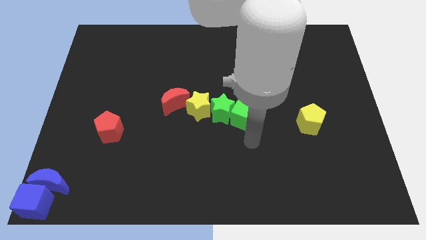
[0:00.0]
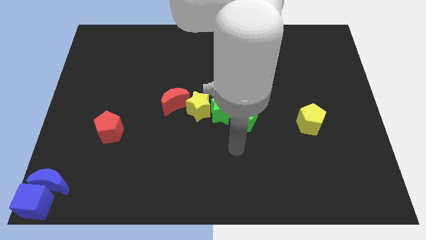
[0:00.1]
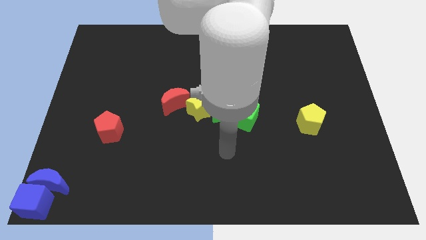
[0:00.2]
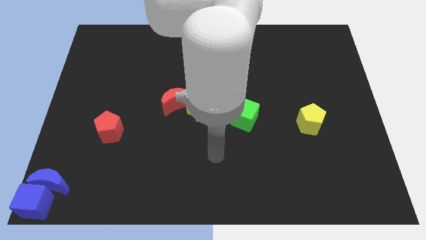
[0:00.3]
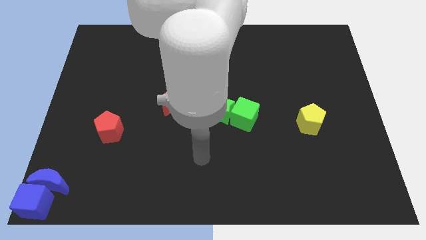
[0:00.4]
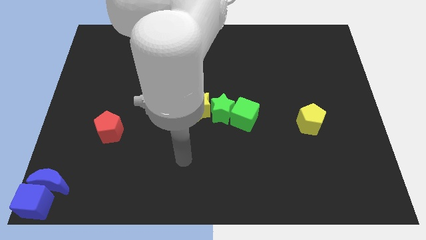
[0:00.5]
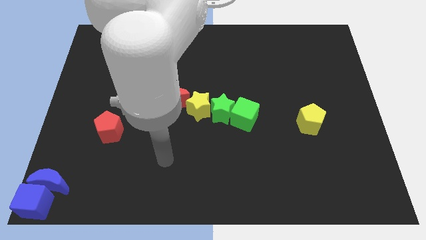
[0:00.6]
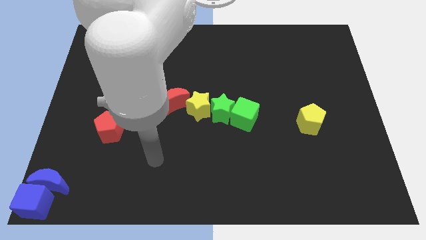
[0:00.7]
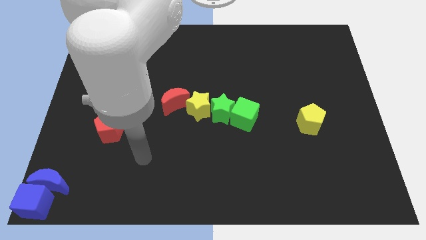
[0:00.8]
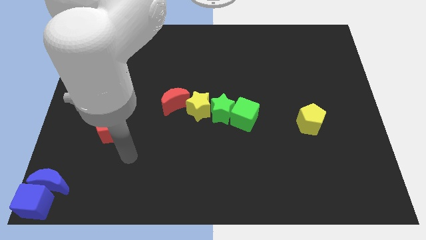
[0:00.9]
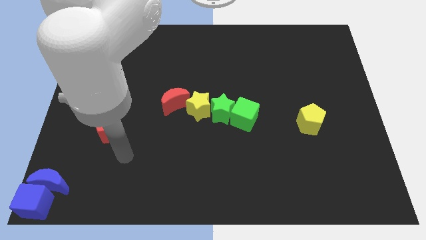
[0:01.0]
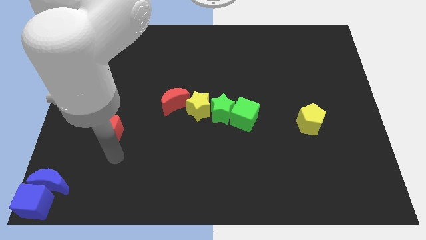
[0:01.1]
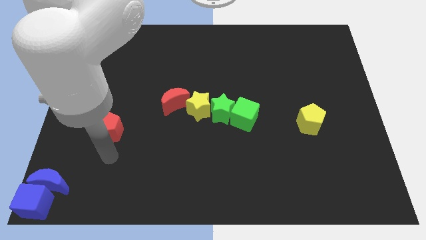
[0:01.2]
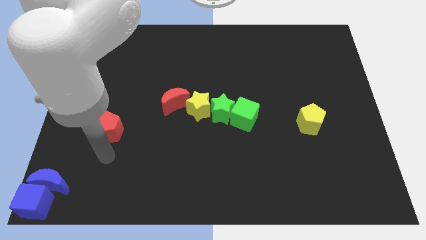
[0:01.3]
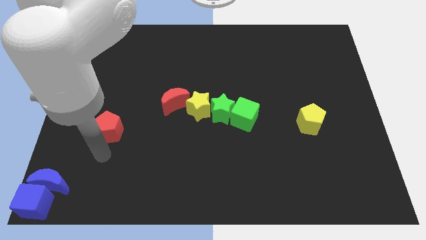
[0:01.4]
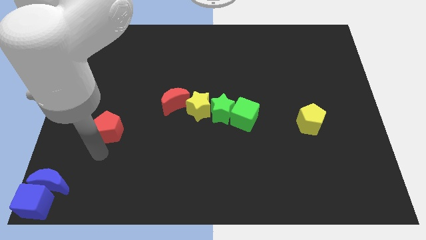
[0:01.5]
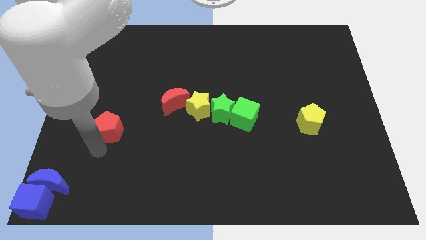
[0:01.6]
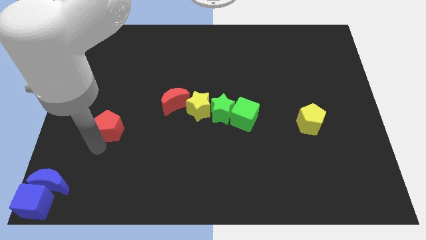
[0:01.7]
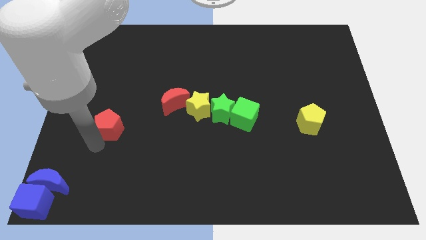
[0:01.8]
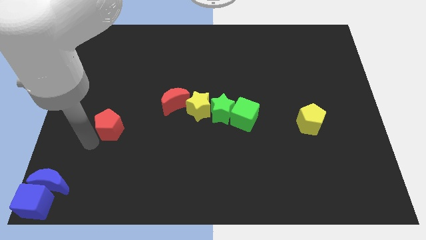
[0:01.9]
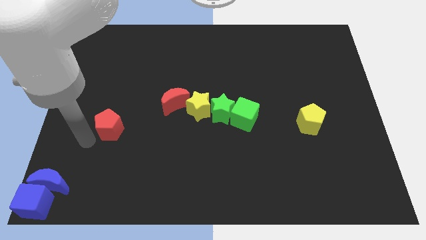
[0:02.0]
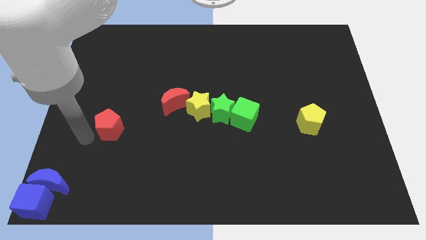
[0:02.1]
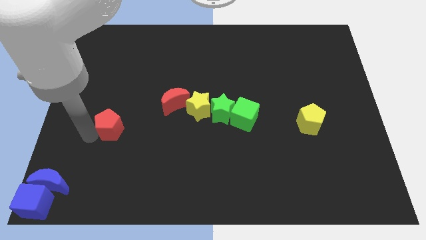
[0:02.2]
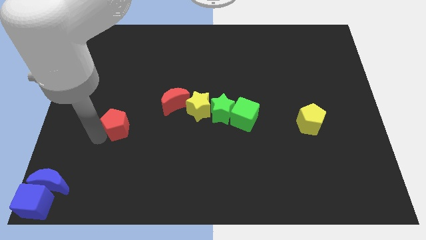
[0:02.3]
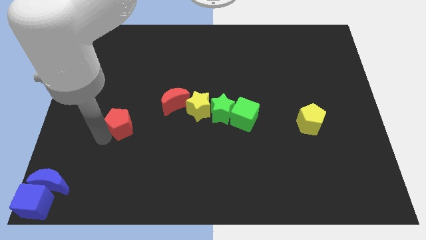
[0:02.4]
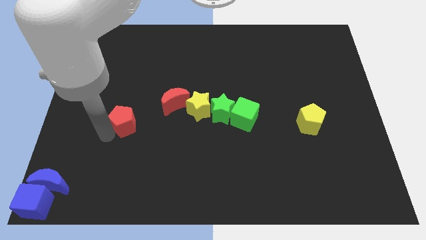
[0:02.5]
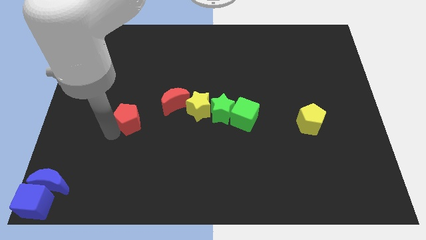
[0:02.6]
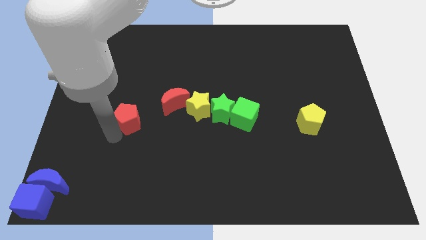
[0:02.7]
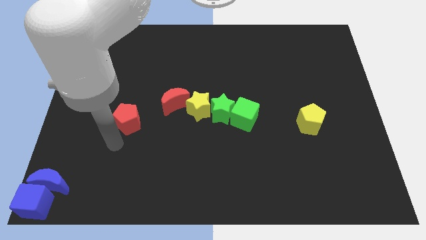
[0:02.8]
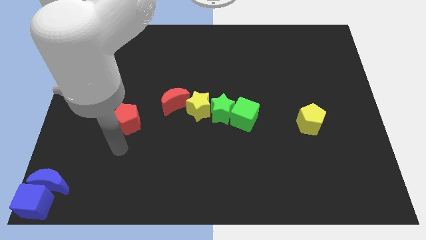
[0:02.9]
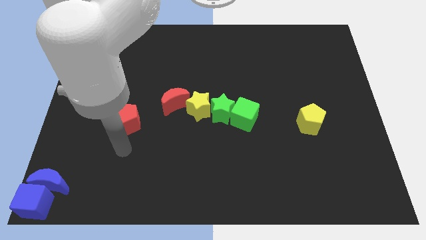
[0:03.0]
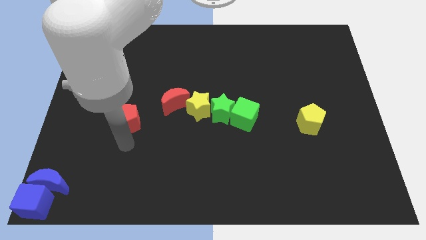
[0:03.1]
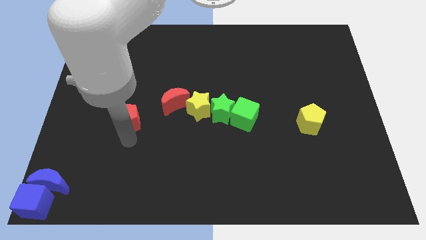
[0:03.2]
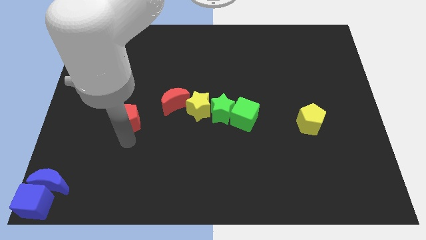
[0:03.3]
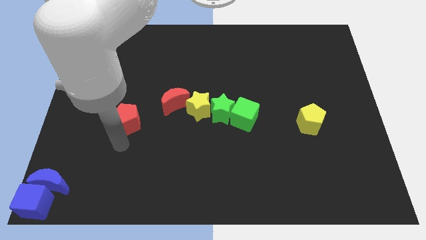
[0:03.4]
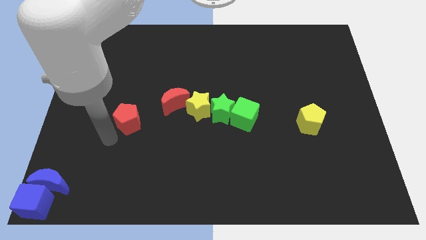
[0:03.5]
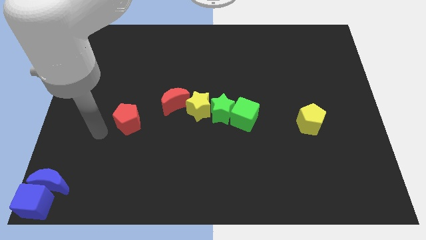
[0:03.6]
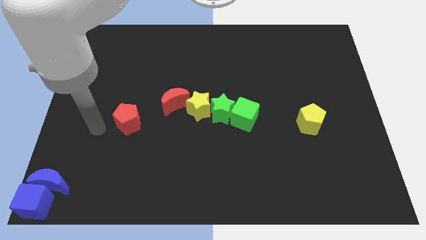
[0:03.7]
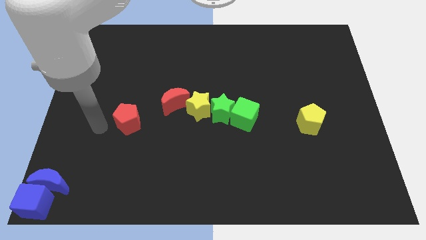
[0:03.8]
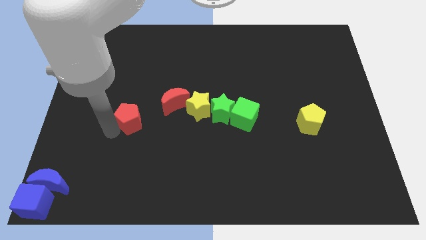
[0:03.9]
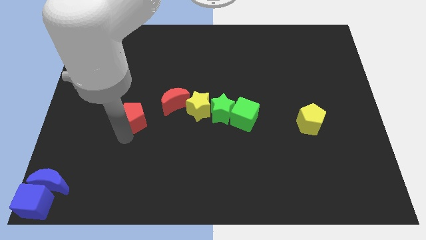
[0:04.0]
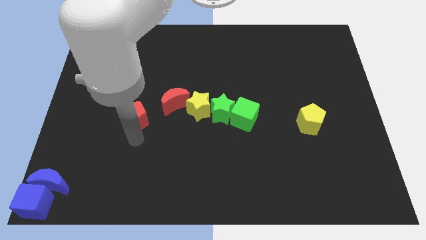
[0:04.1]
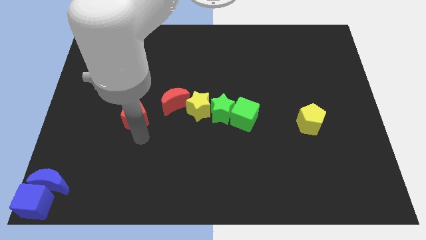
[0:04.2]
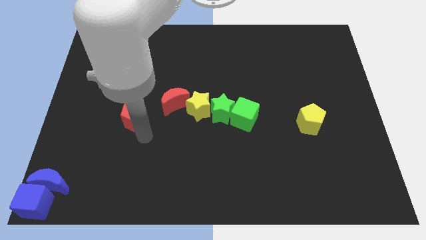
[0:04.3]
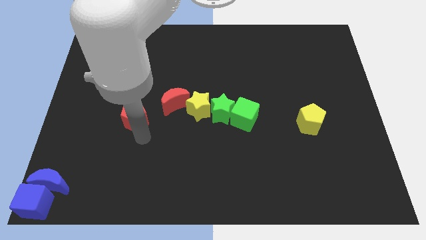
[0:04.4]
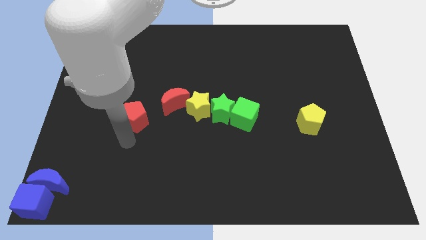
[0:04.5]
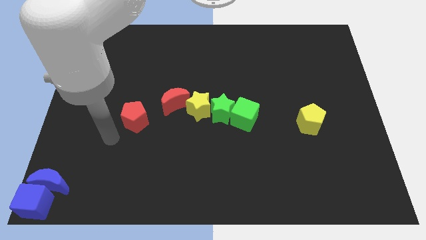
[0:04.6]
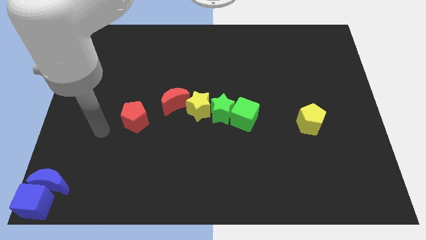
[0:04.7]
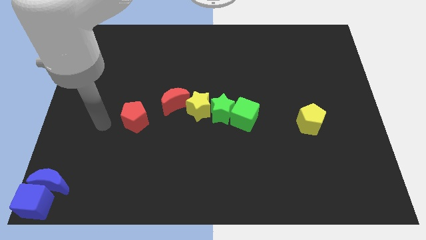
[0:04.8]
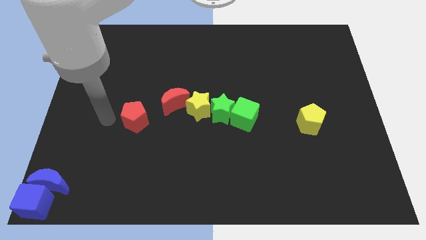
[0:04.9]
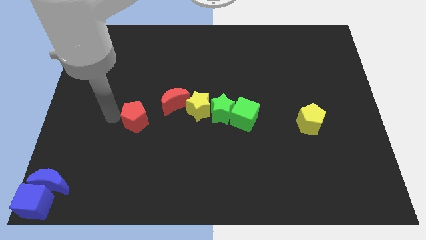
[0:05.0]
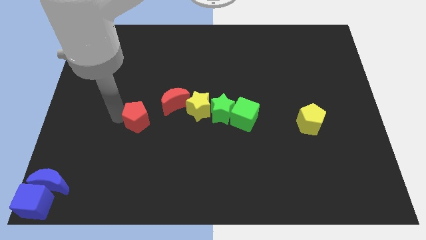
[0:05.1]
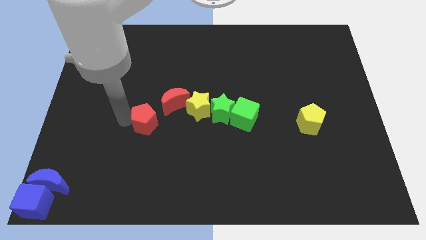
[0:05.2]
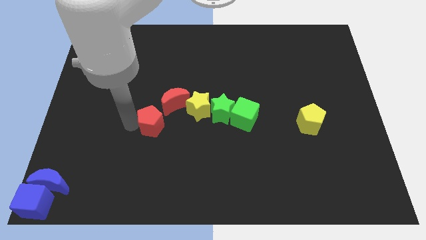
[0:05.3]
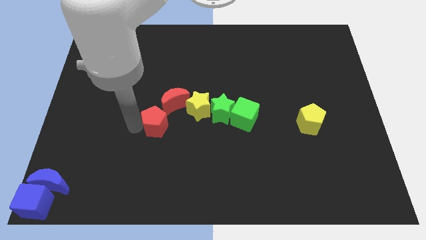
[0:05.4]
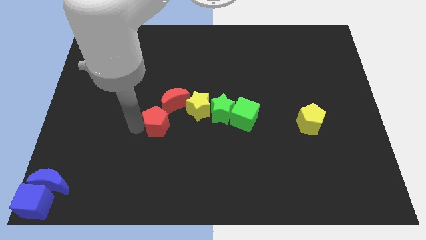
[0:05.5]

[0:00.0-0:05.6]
put the red pentagon at the bottom left side of the red moon

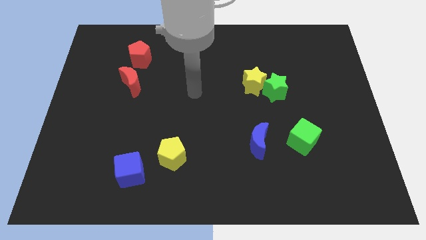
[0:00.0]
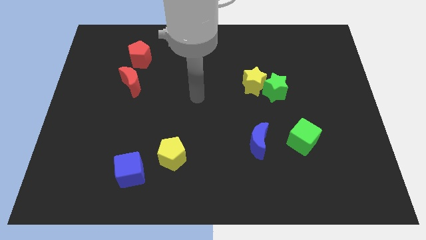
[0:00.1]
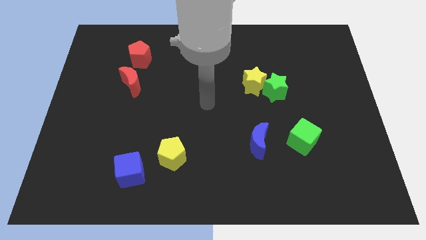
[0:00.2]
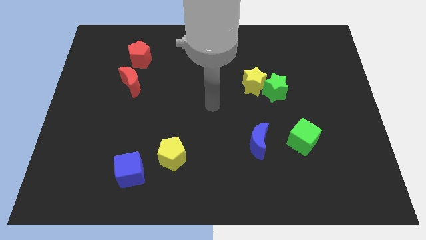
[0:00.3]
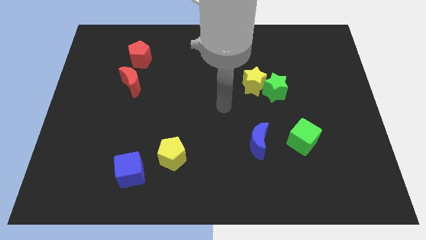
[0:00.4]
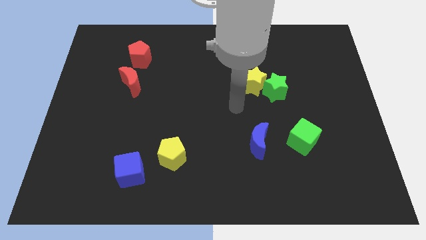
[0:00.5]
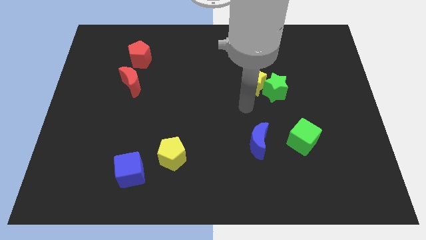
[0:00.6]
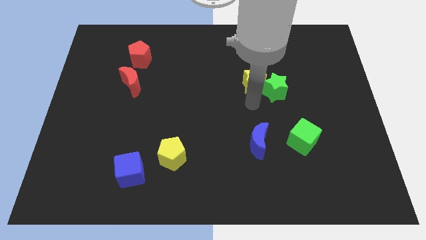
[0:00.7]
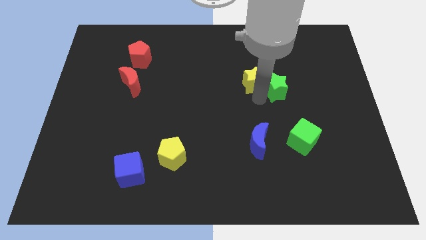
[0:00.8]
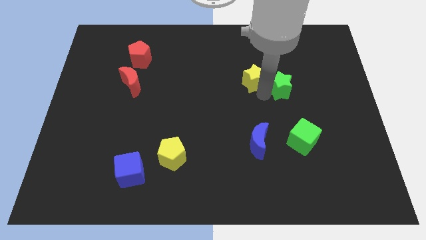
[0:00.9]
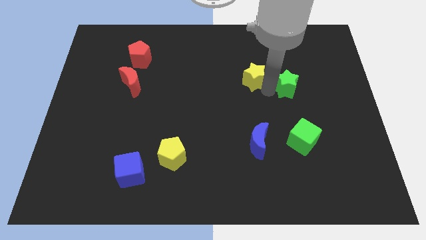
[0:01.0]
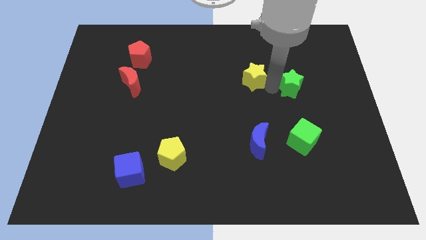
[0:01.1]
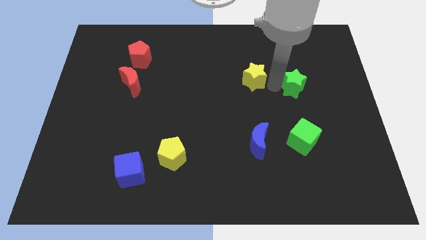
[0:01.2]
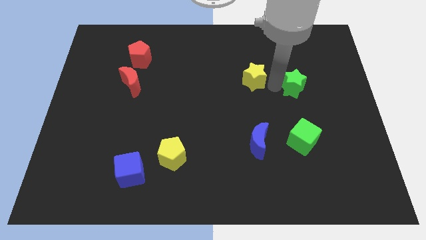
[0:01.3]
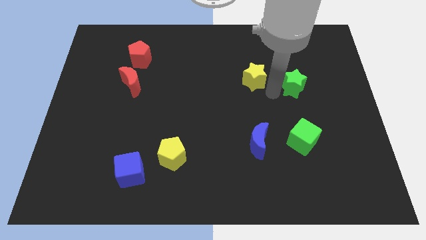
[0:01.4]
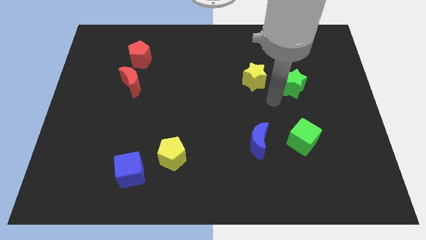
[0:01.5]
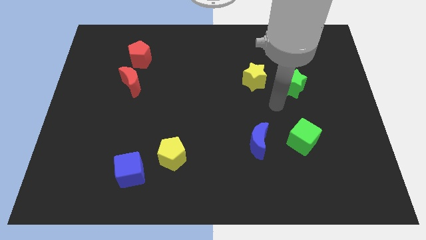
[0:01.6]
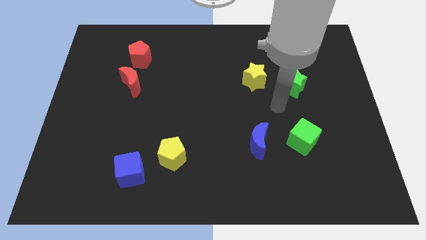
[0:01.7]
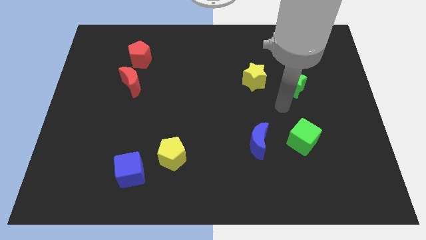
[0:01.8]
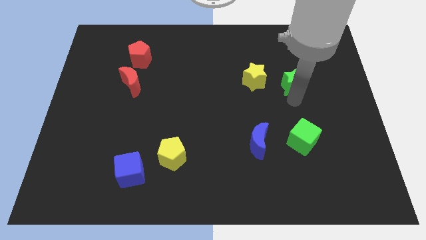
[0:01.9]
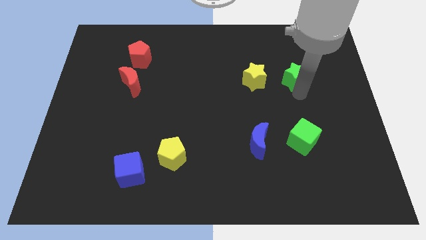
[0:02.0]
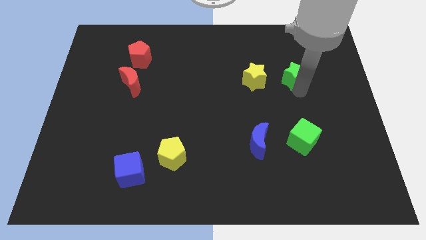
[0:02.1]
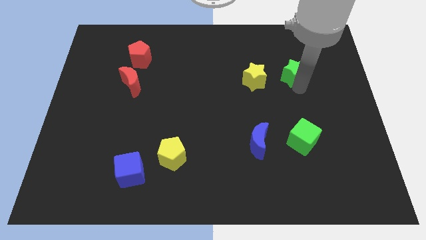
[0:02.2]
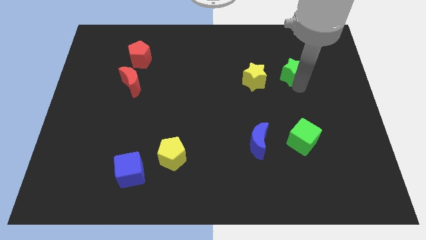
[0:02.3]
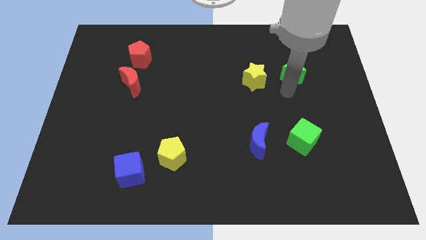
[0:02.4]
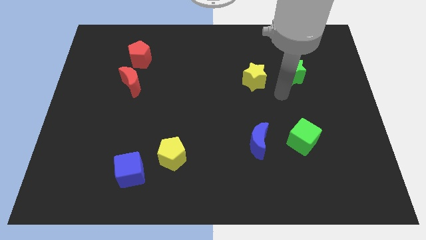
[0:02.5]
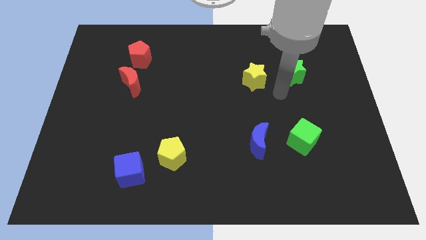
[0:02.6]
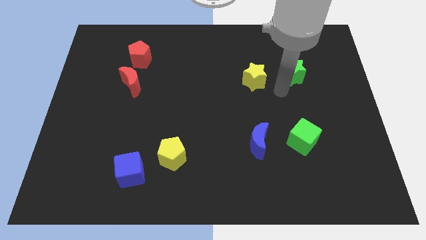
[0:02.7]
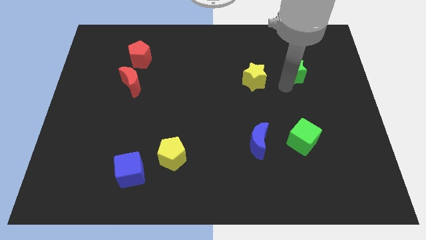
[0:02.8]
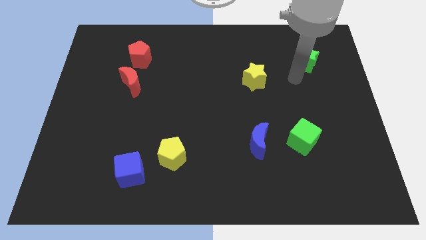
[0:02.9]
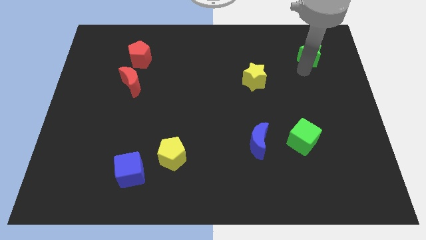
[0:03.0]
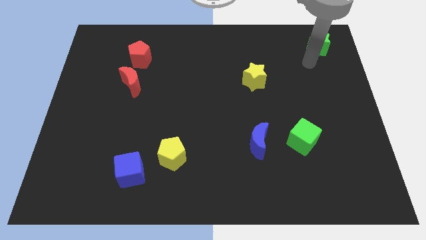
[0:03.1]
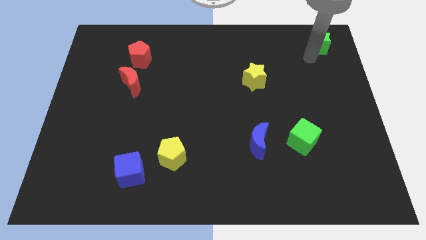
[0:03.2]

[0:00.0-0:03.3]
push the green star towards the top right corner of the board

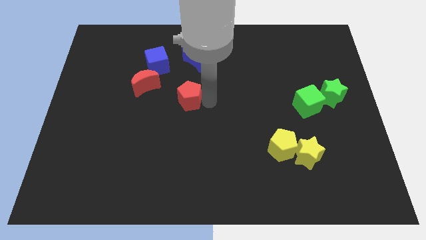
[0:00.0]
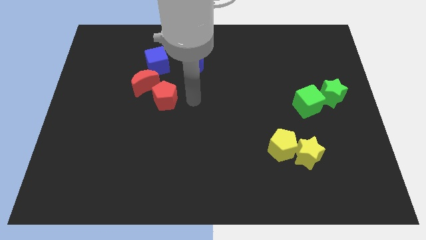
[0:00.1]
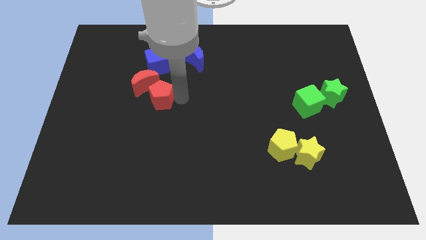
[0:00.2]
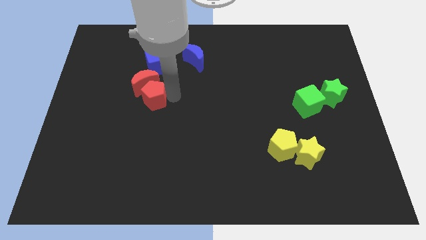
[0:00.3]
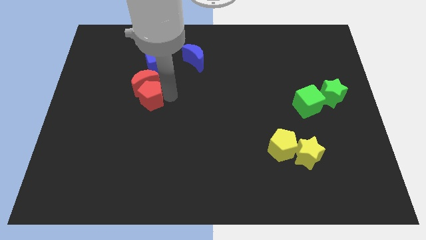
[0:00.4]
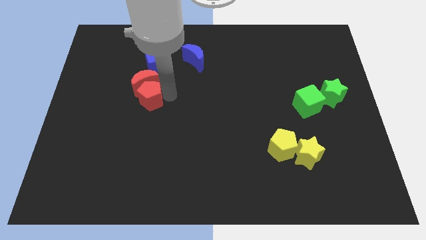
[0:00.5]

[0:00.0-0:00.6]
place red pentagon below red crescent
